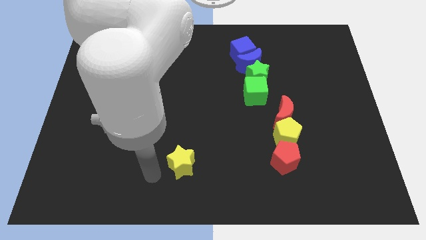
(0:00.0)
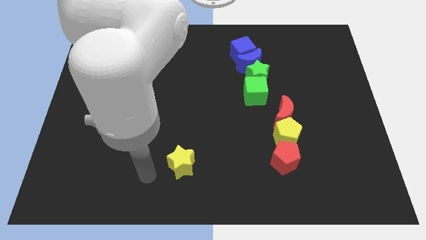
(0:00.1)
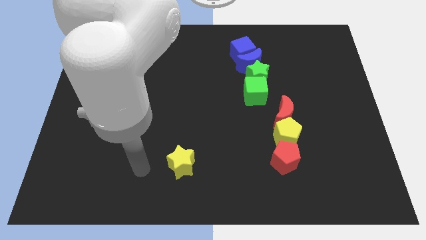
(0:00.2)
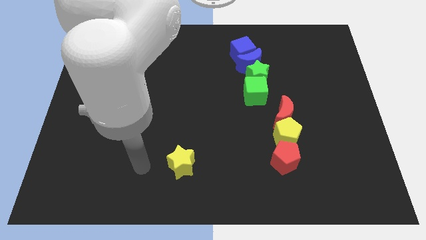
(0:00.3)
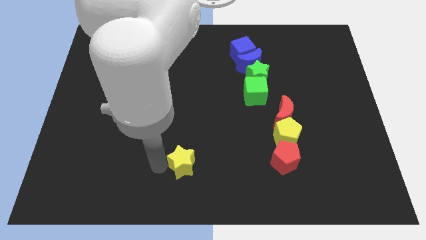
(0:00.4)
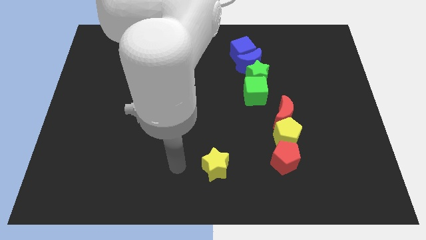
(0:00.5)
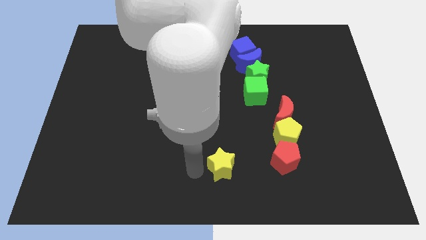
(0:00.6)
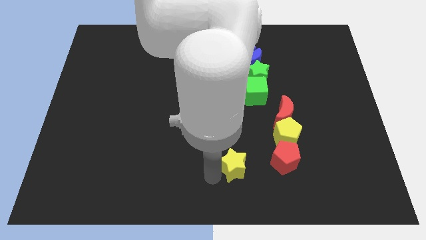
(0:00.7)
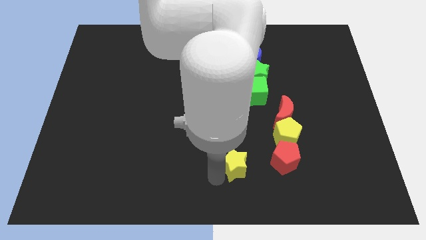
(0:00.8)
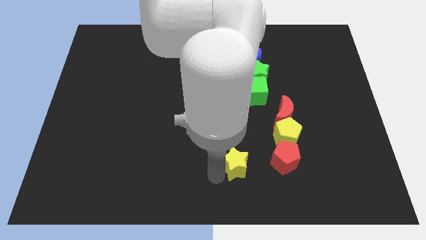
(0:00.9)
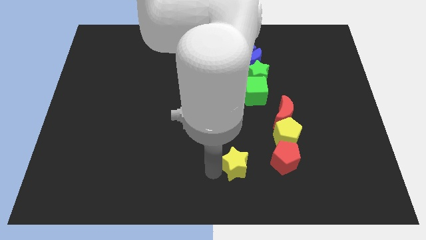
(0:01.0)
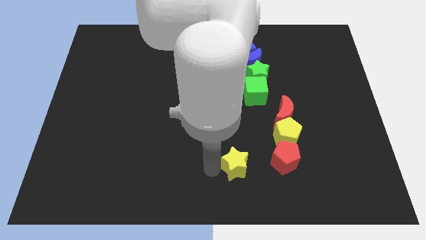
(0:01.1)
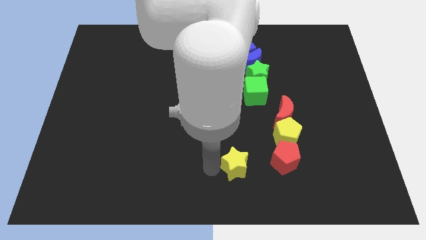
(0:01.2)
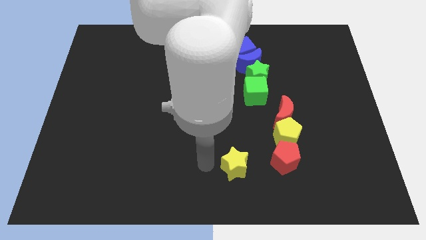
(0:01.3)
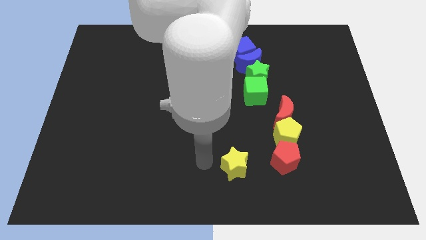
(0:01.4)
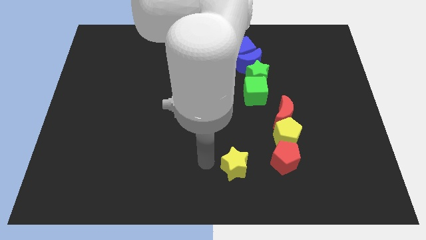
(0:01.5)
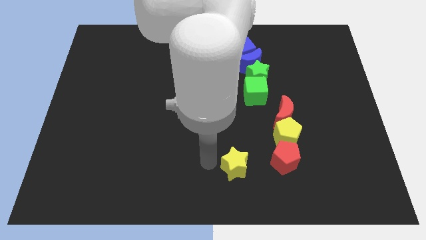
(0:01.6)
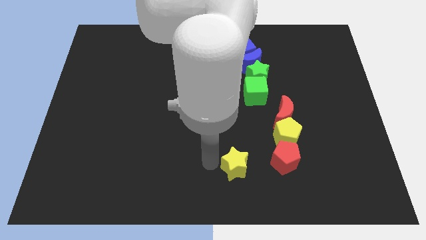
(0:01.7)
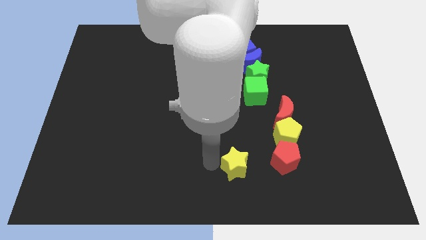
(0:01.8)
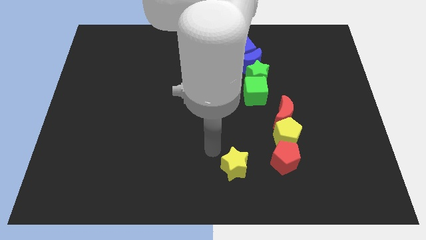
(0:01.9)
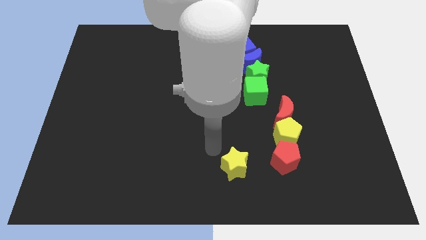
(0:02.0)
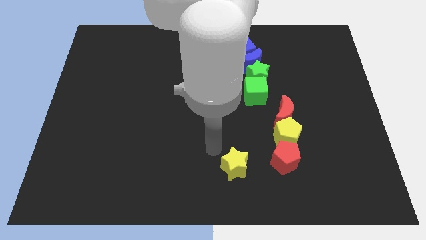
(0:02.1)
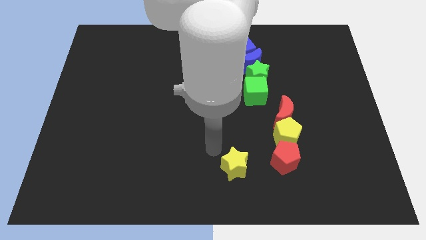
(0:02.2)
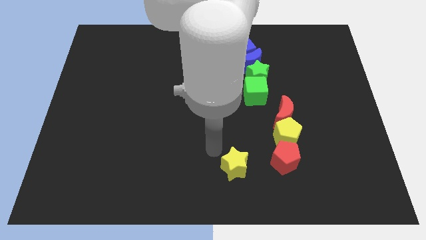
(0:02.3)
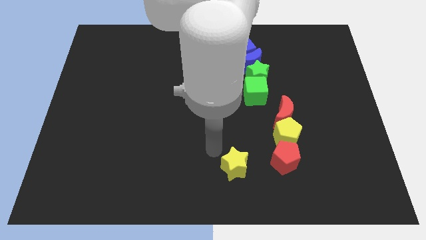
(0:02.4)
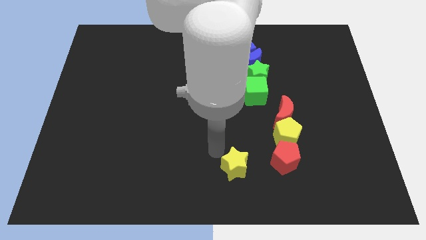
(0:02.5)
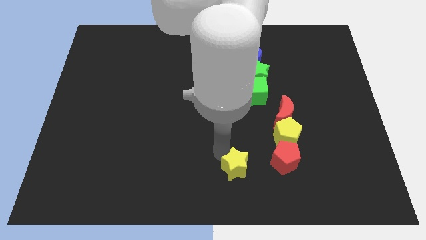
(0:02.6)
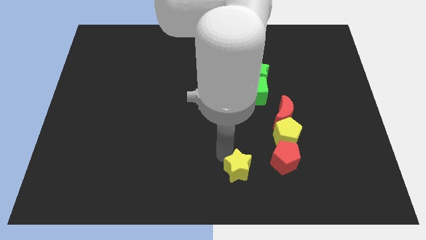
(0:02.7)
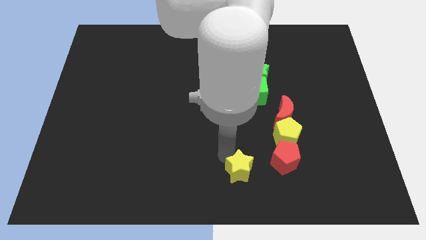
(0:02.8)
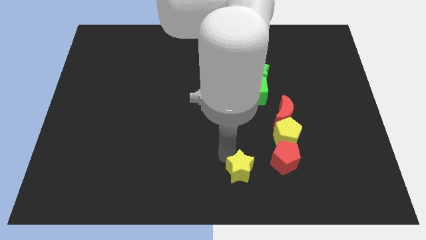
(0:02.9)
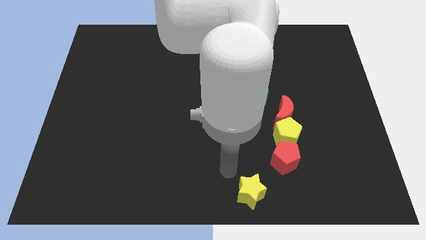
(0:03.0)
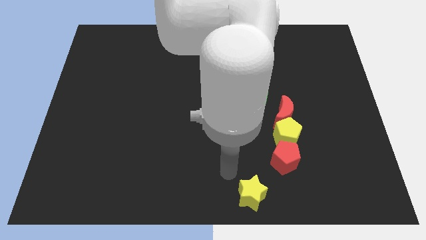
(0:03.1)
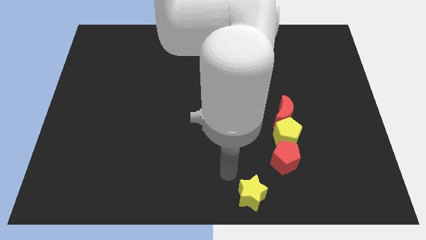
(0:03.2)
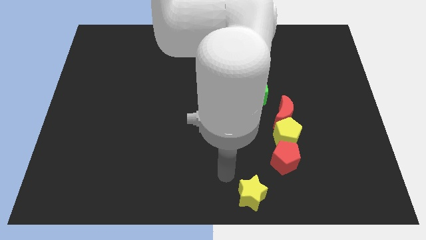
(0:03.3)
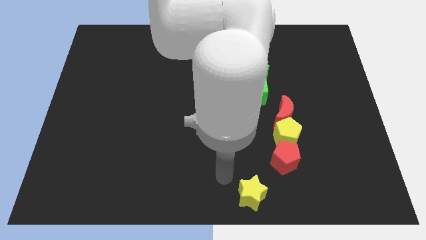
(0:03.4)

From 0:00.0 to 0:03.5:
place the yellow star at the bottom left of the red pentagon

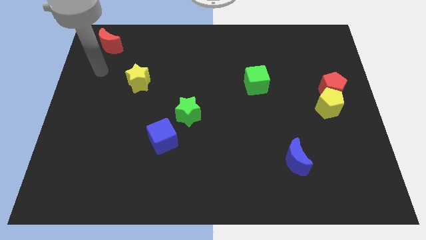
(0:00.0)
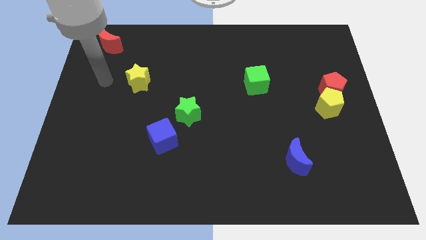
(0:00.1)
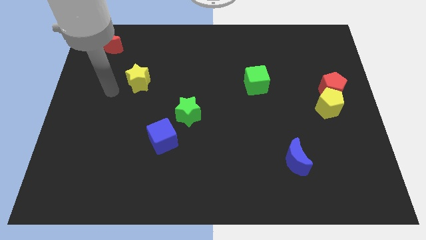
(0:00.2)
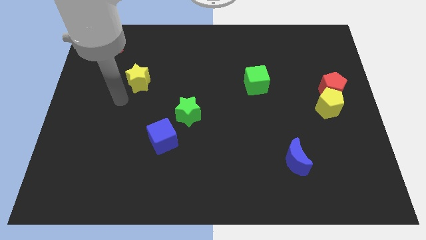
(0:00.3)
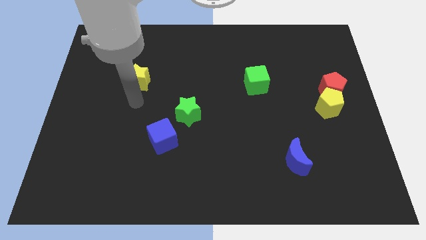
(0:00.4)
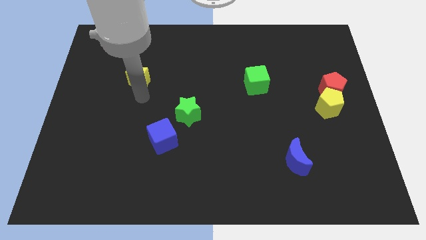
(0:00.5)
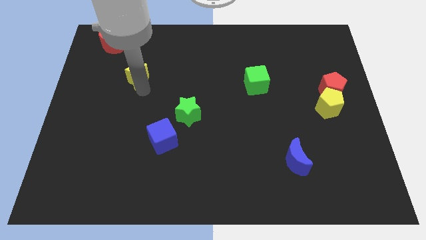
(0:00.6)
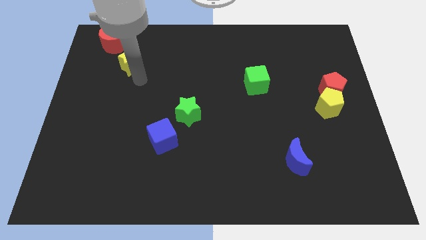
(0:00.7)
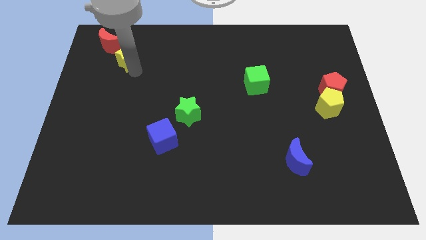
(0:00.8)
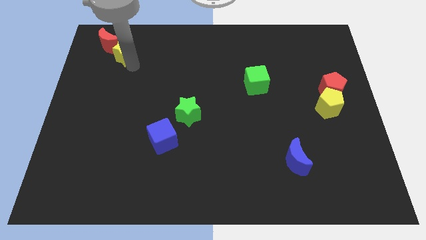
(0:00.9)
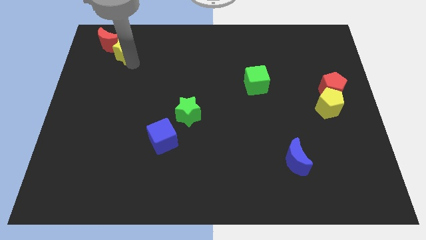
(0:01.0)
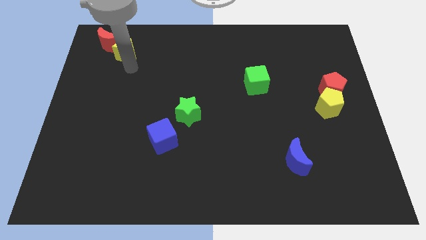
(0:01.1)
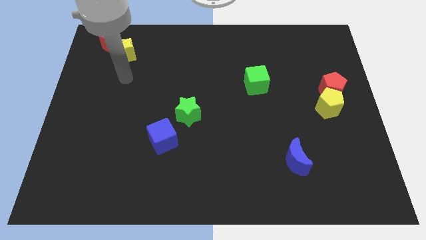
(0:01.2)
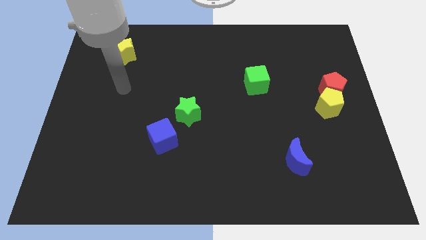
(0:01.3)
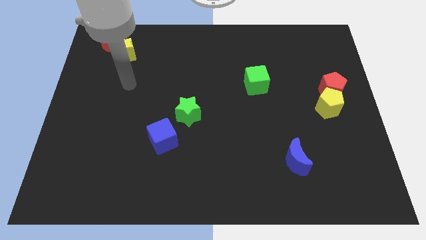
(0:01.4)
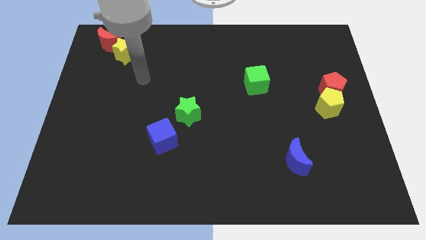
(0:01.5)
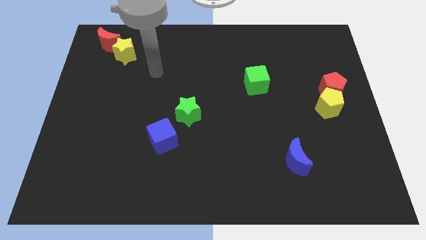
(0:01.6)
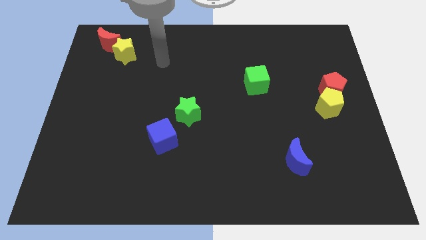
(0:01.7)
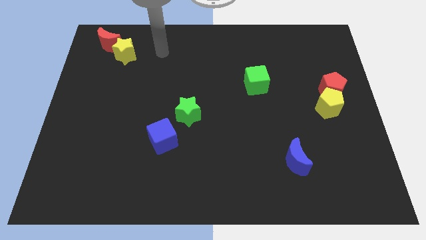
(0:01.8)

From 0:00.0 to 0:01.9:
push the yellow star into red crescent

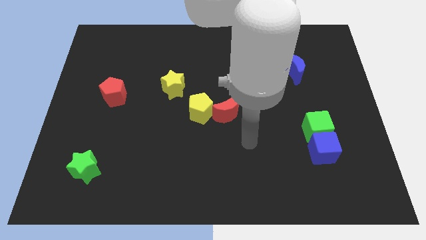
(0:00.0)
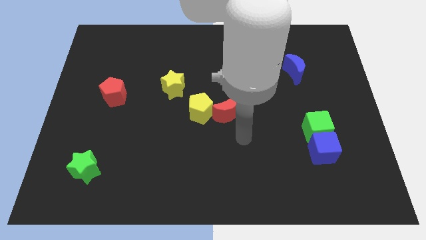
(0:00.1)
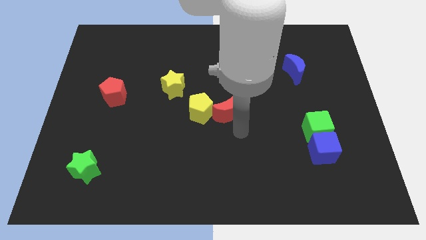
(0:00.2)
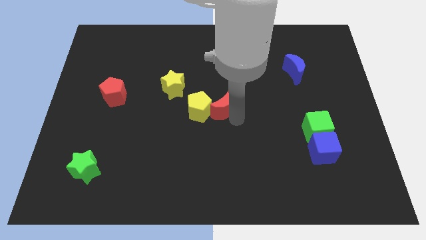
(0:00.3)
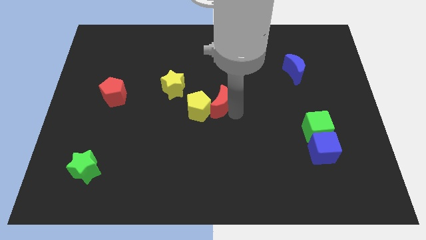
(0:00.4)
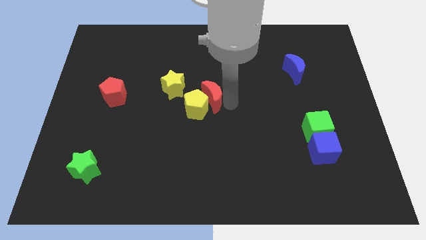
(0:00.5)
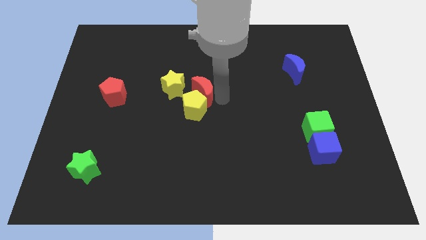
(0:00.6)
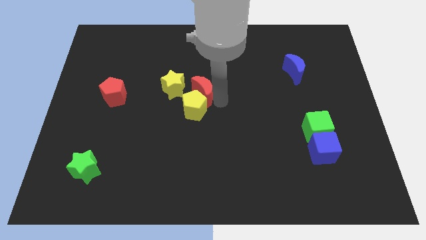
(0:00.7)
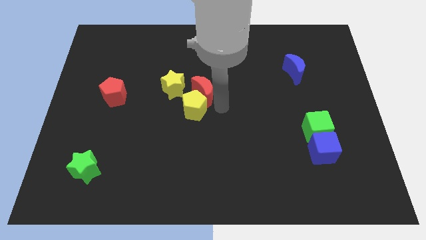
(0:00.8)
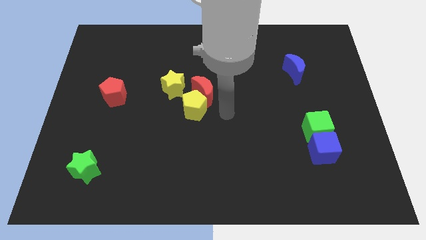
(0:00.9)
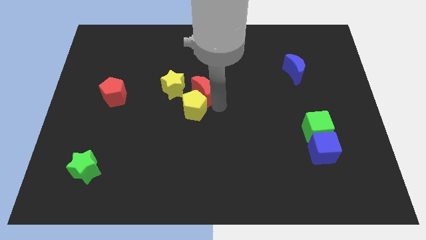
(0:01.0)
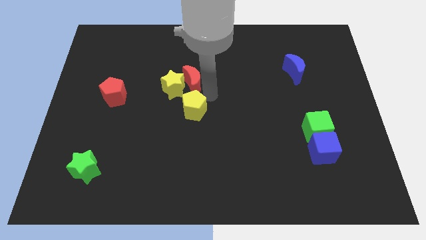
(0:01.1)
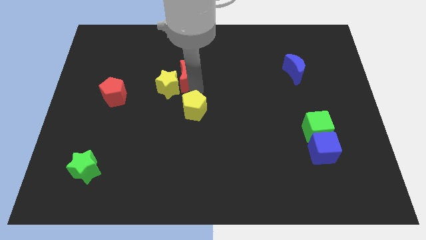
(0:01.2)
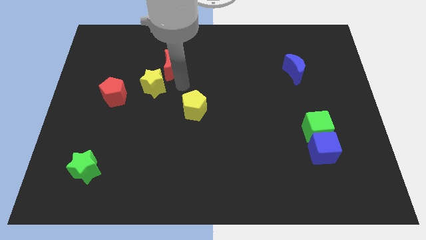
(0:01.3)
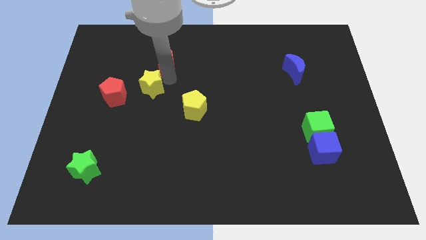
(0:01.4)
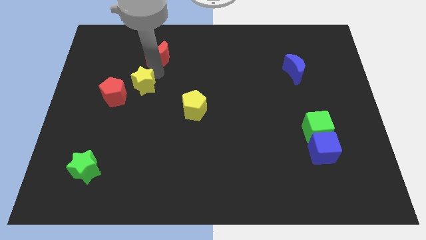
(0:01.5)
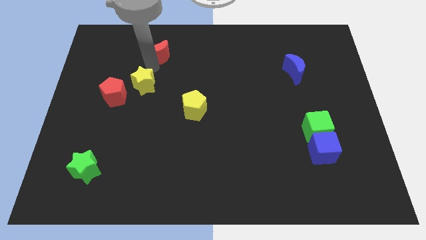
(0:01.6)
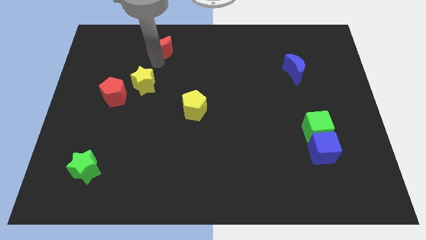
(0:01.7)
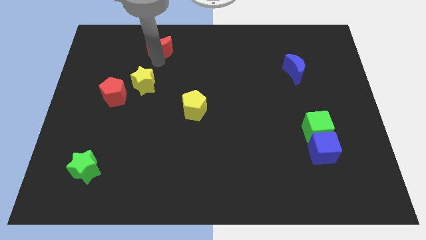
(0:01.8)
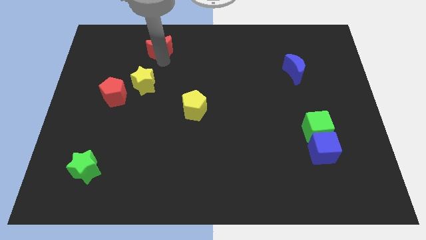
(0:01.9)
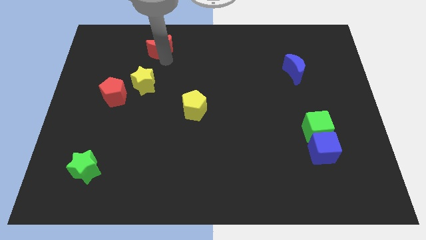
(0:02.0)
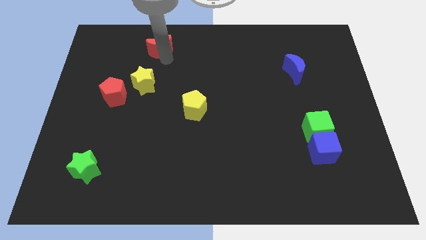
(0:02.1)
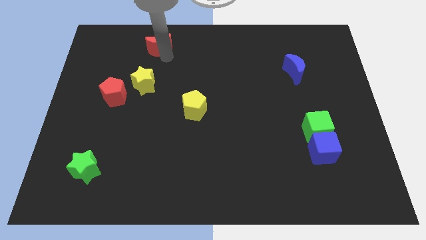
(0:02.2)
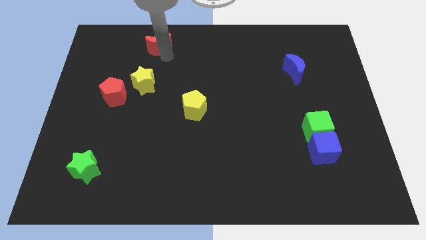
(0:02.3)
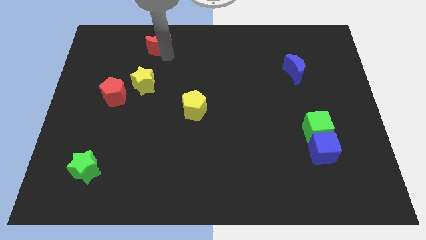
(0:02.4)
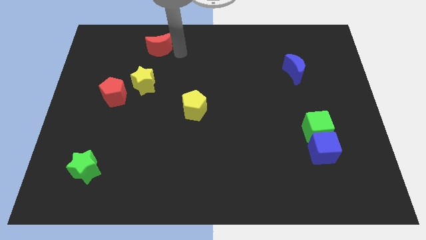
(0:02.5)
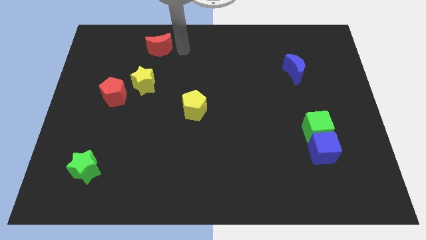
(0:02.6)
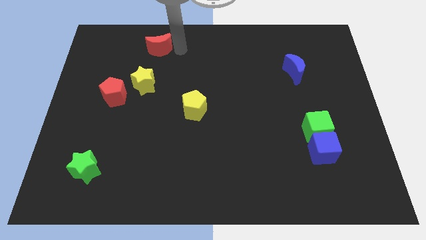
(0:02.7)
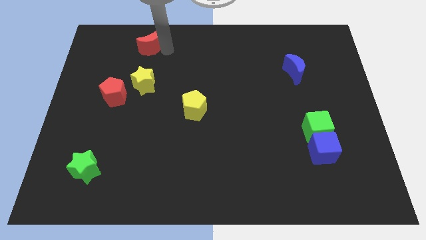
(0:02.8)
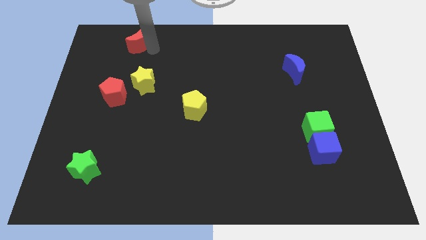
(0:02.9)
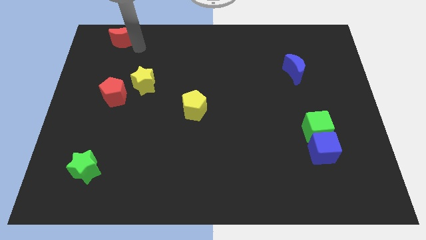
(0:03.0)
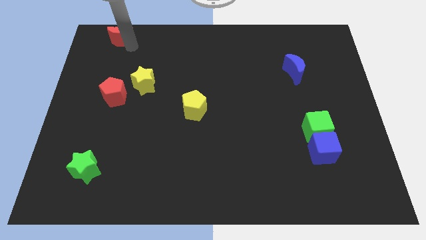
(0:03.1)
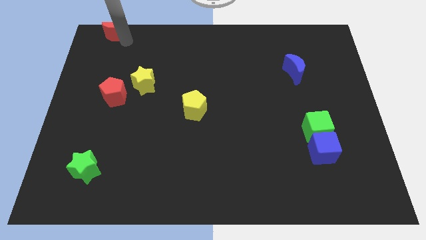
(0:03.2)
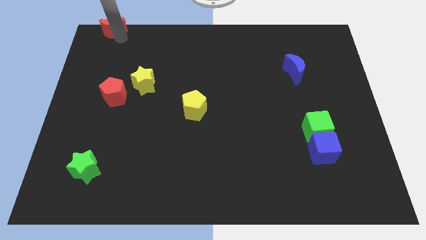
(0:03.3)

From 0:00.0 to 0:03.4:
move the red crescent diagonally to the top of the yellow star

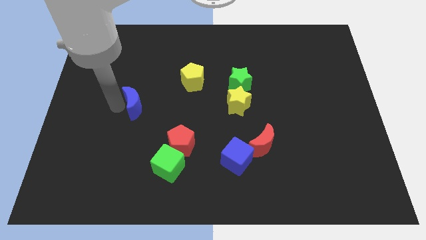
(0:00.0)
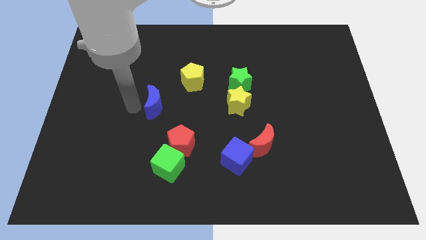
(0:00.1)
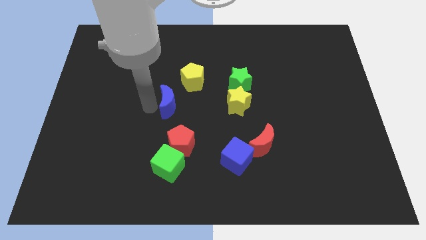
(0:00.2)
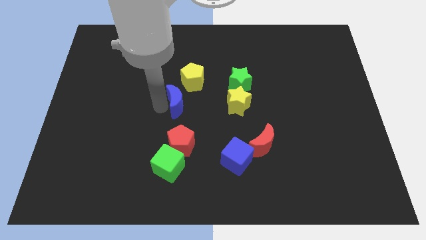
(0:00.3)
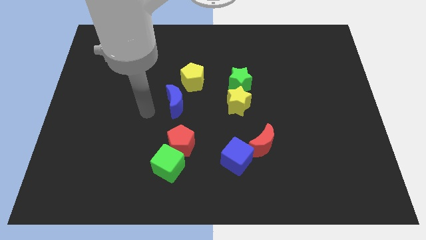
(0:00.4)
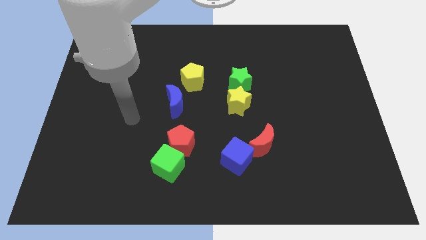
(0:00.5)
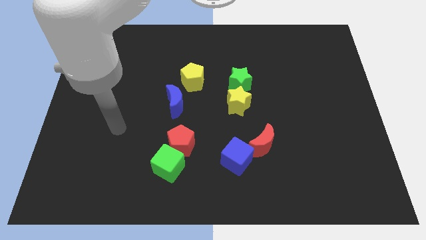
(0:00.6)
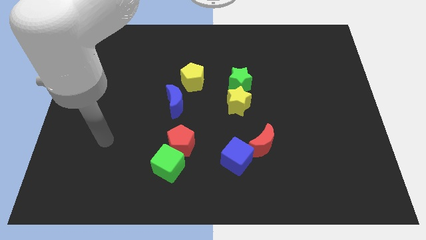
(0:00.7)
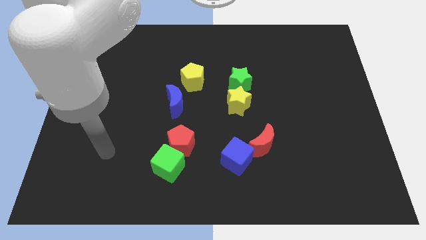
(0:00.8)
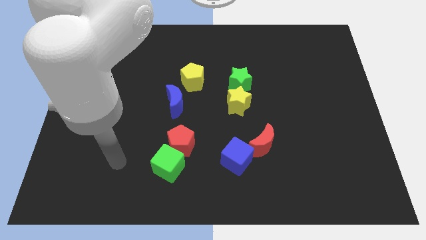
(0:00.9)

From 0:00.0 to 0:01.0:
push the blue crescent to the bottom left of the yellow pentagon
